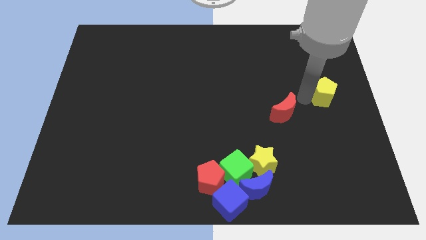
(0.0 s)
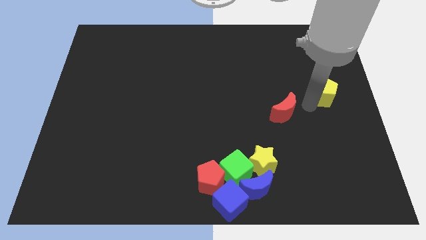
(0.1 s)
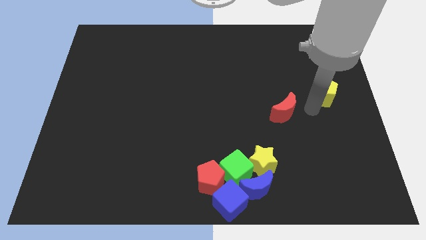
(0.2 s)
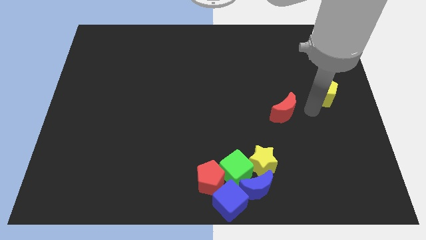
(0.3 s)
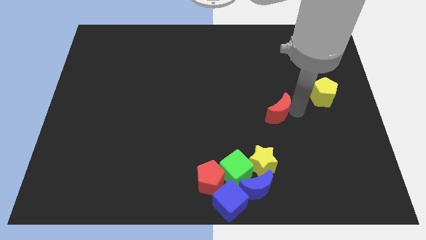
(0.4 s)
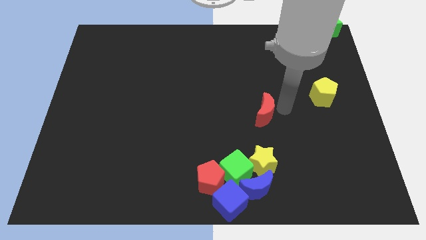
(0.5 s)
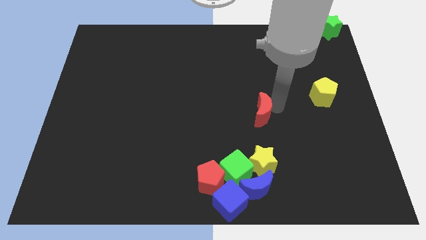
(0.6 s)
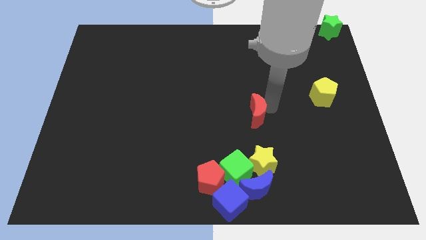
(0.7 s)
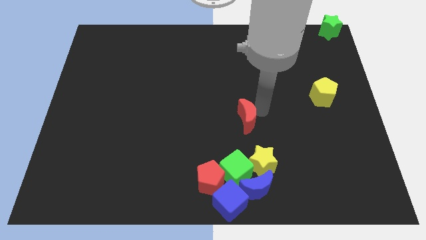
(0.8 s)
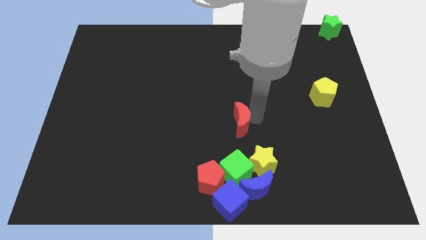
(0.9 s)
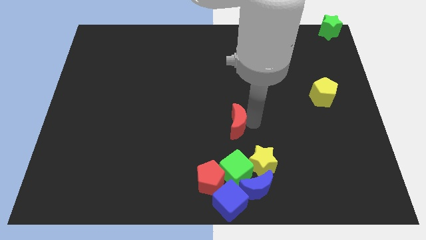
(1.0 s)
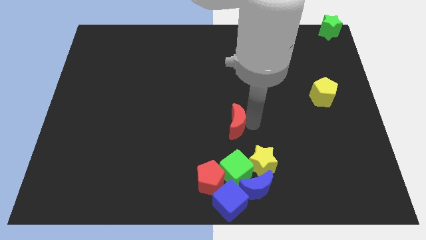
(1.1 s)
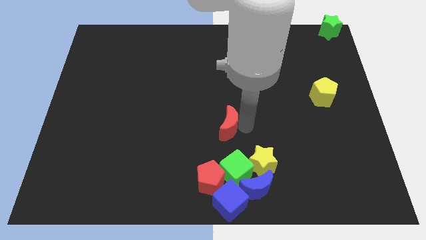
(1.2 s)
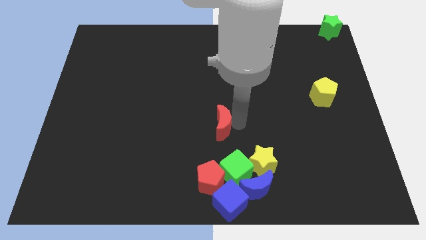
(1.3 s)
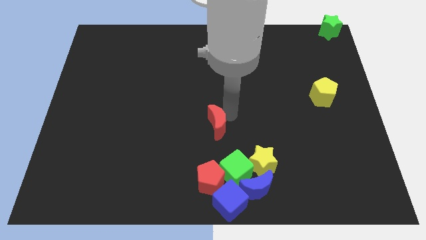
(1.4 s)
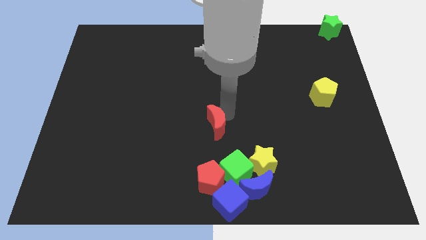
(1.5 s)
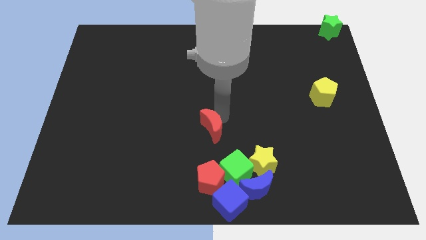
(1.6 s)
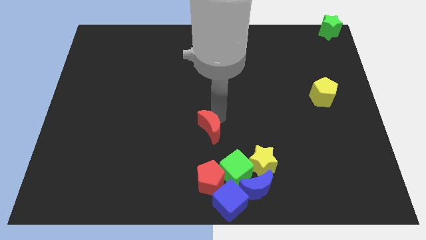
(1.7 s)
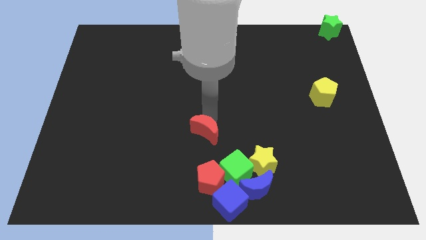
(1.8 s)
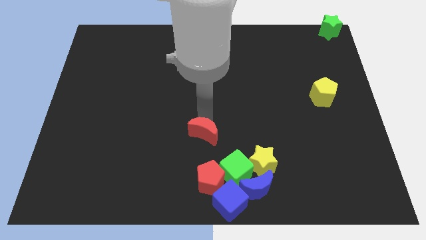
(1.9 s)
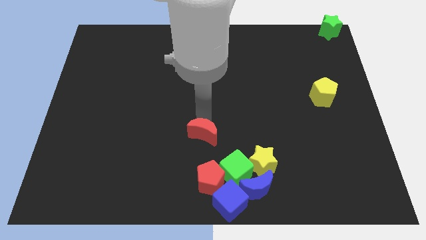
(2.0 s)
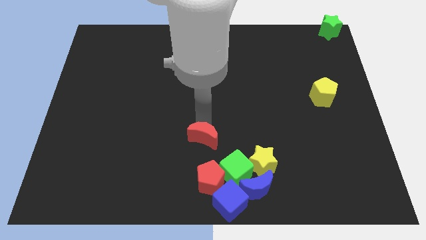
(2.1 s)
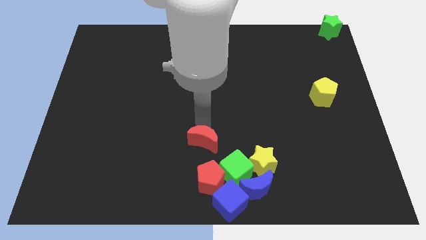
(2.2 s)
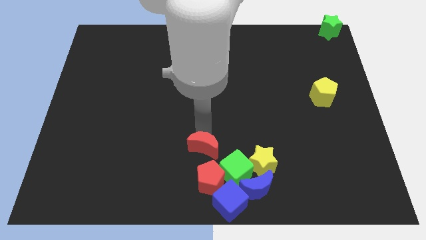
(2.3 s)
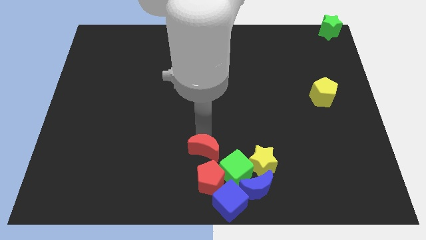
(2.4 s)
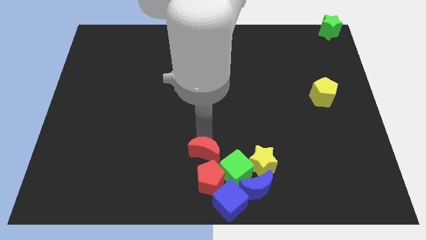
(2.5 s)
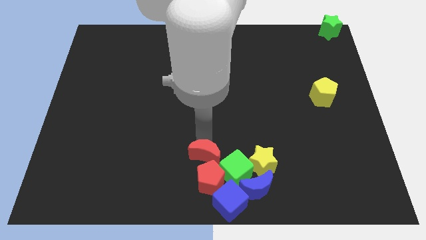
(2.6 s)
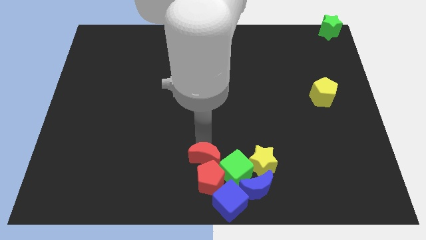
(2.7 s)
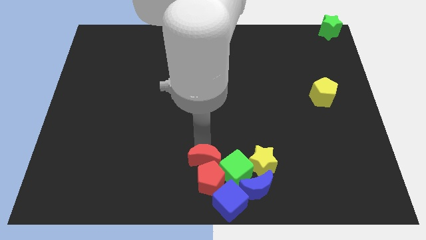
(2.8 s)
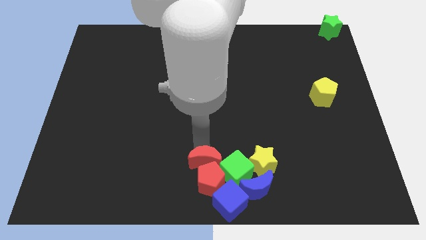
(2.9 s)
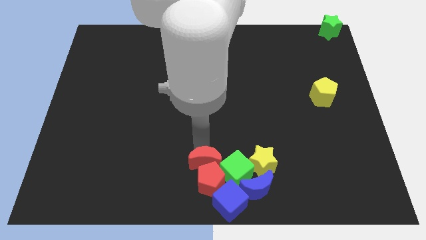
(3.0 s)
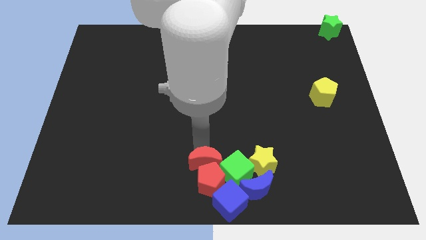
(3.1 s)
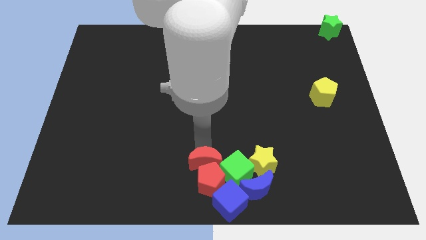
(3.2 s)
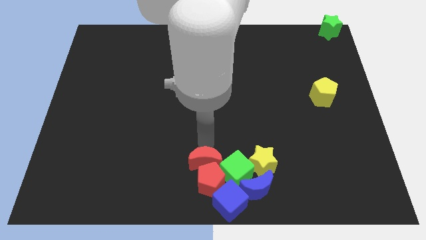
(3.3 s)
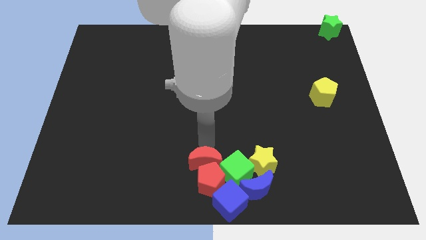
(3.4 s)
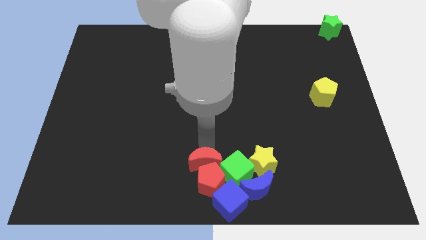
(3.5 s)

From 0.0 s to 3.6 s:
place red moon at the top of red pentagon

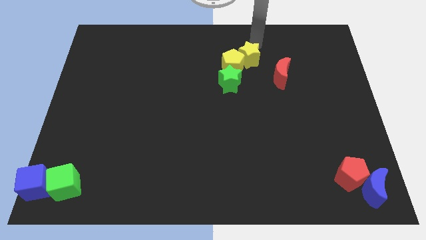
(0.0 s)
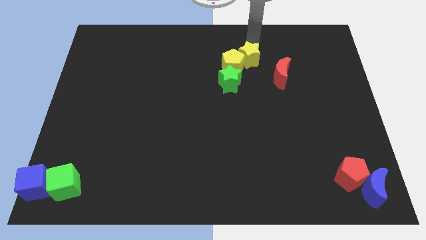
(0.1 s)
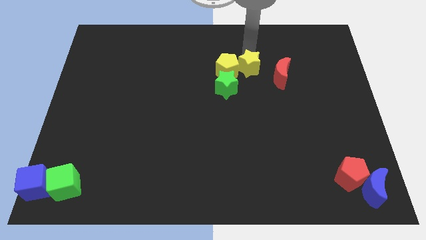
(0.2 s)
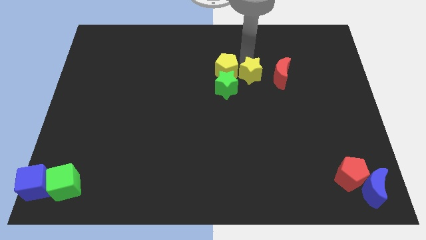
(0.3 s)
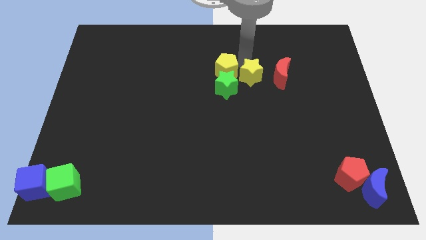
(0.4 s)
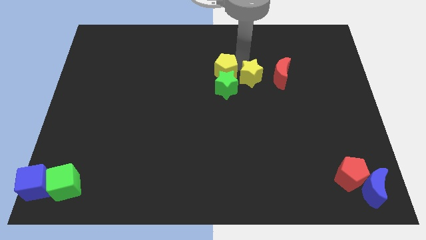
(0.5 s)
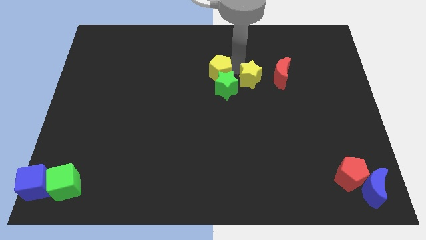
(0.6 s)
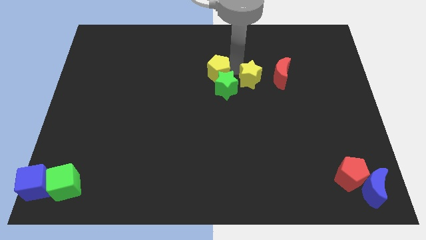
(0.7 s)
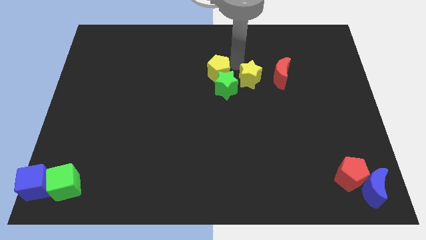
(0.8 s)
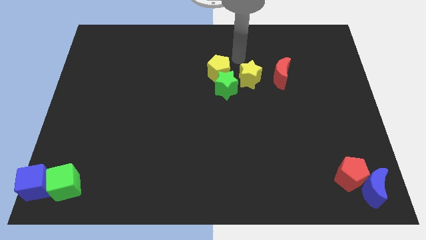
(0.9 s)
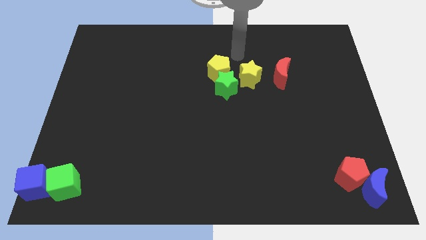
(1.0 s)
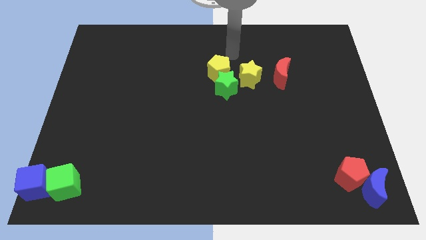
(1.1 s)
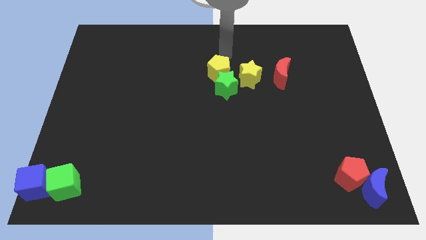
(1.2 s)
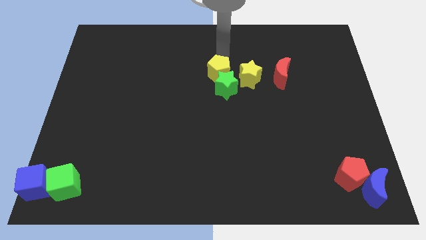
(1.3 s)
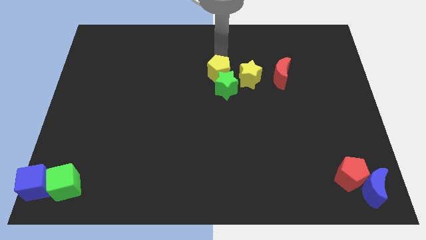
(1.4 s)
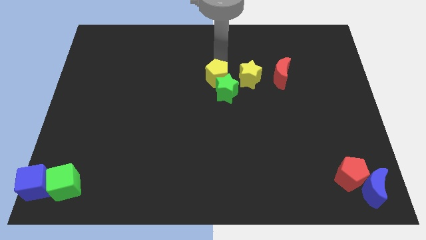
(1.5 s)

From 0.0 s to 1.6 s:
place the yellow star in between the yellow pentagon and the red moon

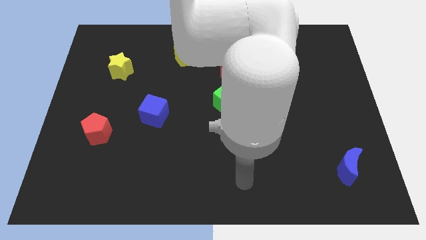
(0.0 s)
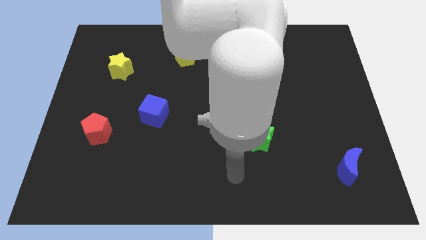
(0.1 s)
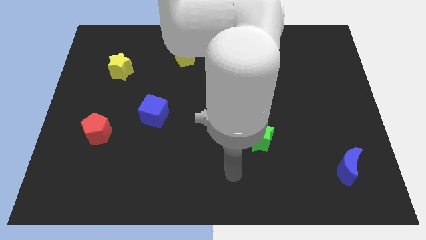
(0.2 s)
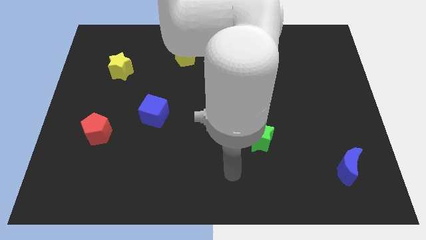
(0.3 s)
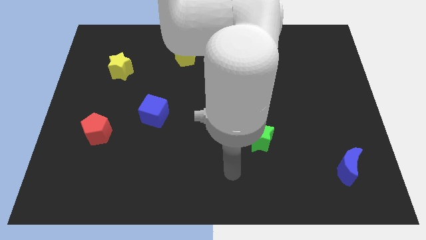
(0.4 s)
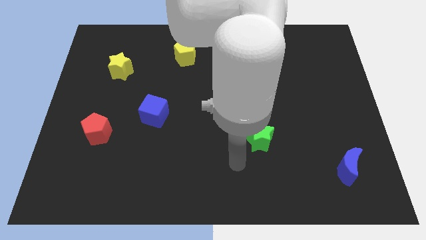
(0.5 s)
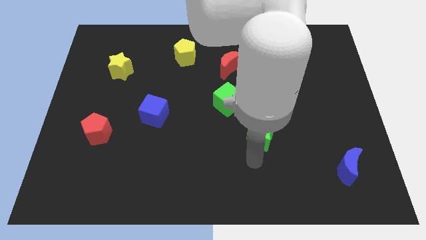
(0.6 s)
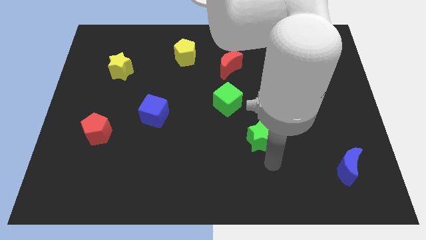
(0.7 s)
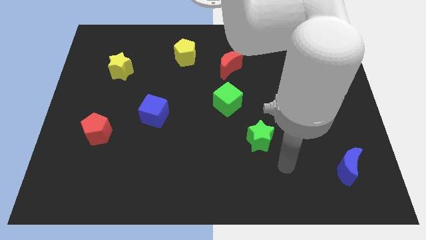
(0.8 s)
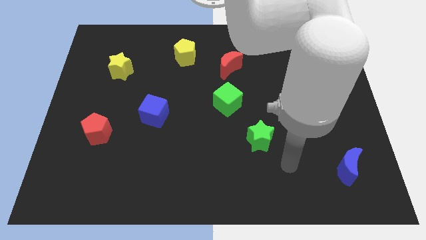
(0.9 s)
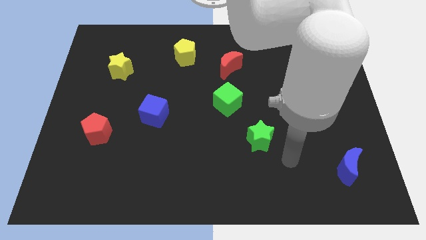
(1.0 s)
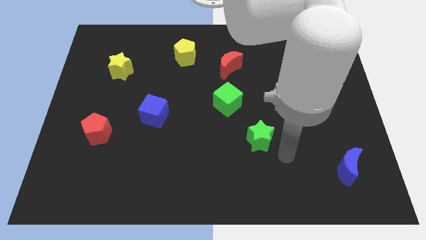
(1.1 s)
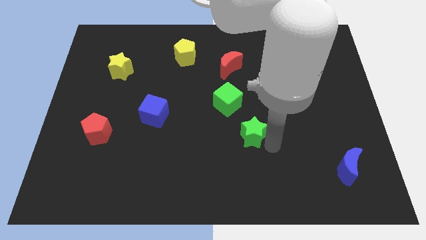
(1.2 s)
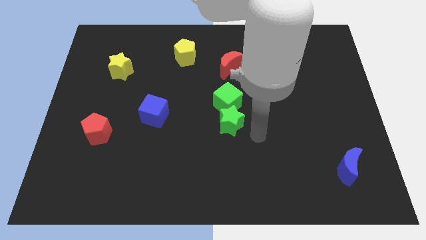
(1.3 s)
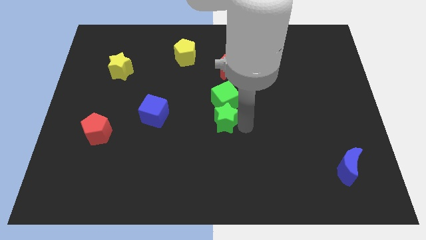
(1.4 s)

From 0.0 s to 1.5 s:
push the green star into green cube

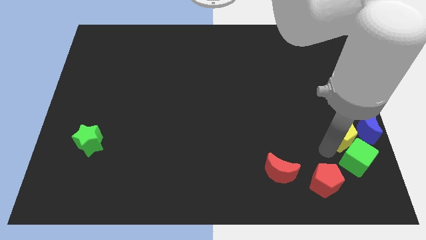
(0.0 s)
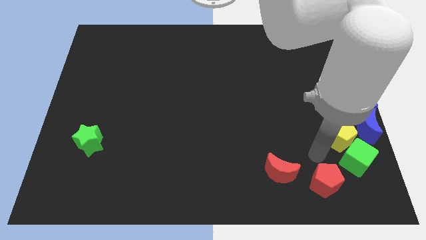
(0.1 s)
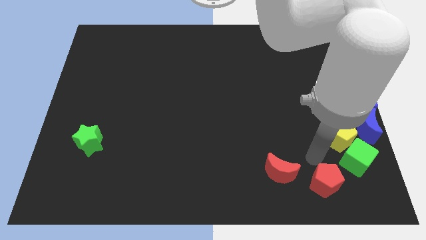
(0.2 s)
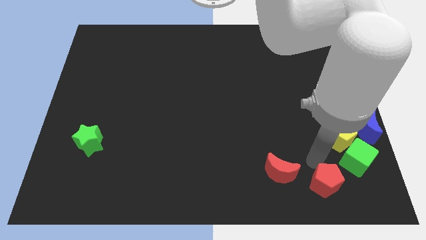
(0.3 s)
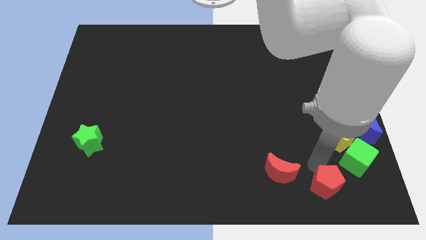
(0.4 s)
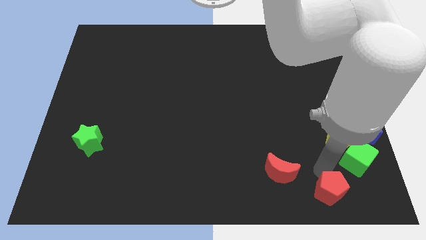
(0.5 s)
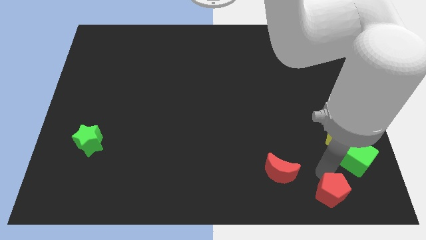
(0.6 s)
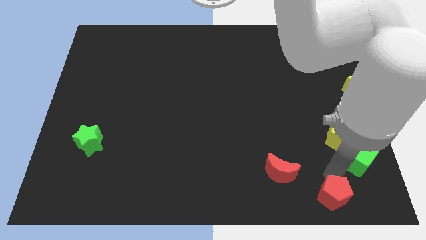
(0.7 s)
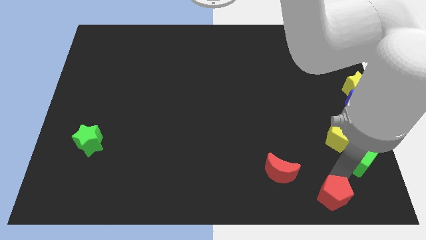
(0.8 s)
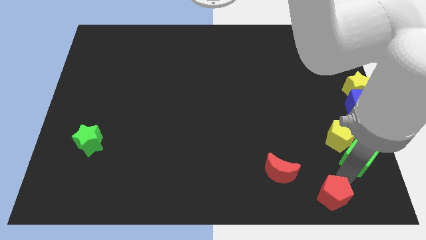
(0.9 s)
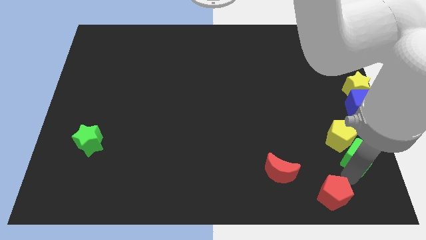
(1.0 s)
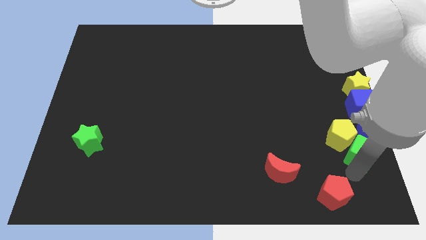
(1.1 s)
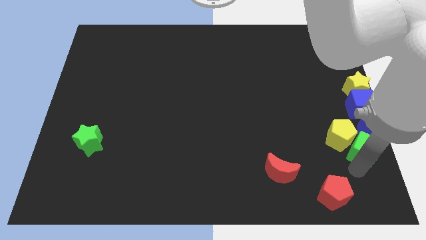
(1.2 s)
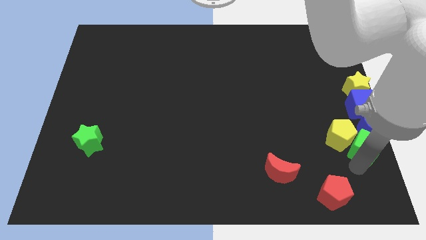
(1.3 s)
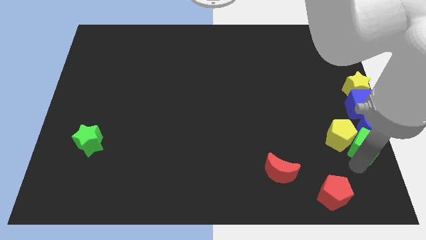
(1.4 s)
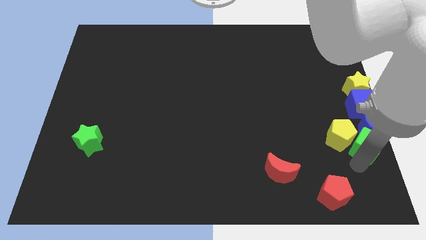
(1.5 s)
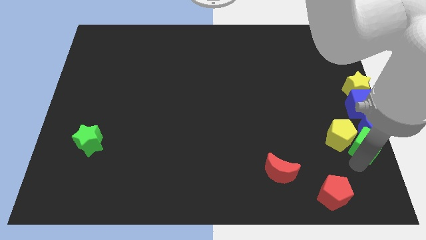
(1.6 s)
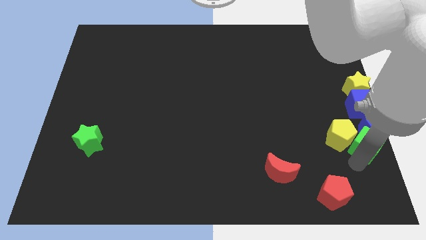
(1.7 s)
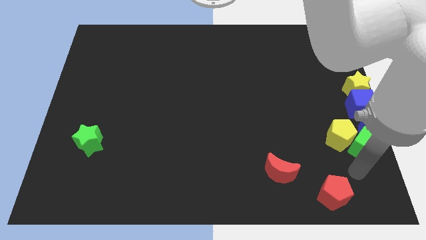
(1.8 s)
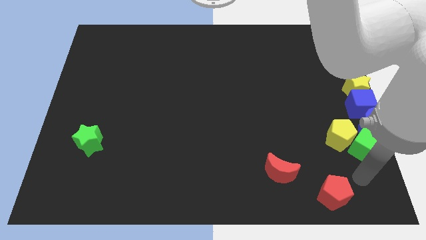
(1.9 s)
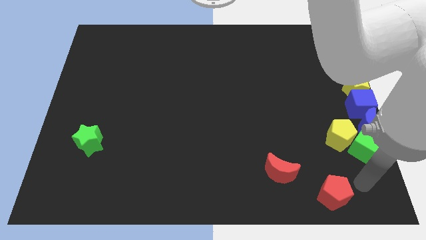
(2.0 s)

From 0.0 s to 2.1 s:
push the green cube into the blue moon
